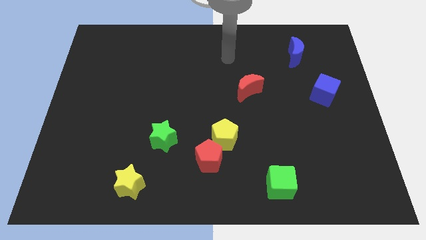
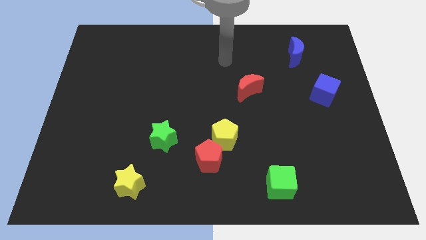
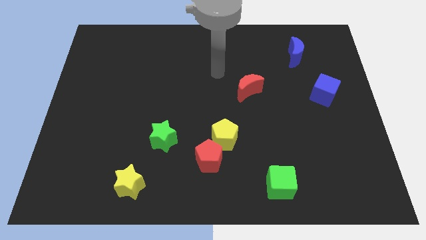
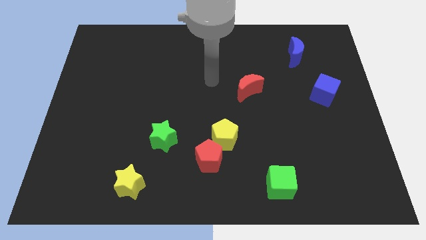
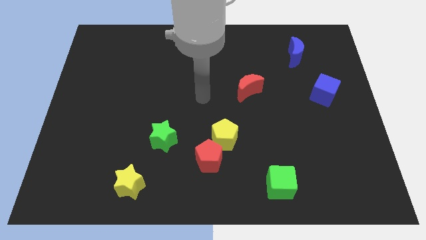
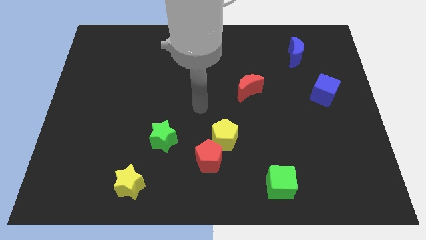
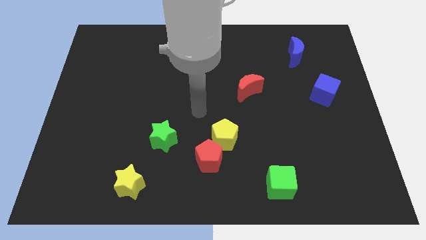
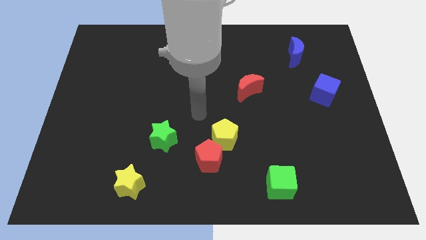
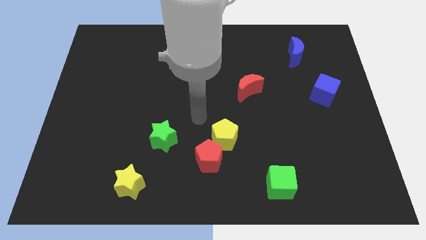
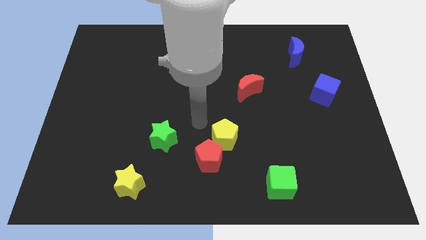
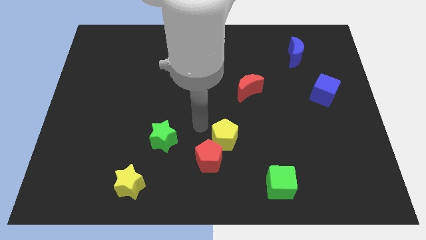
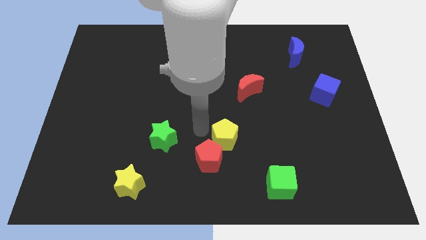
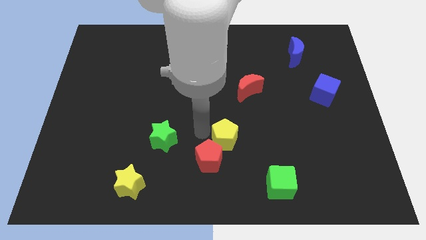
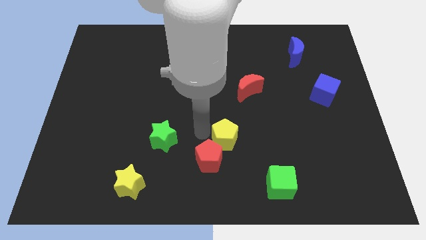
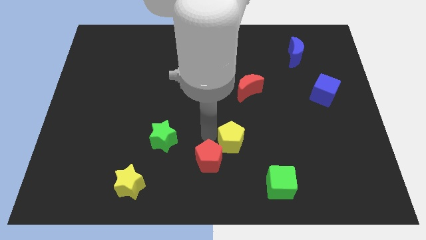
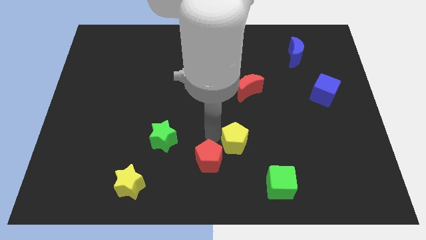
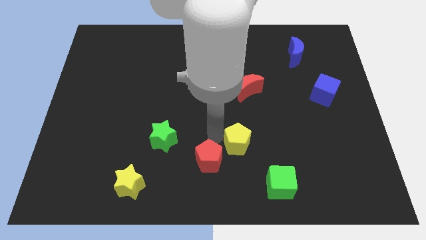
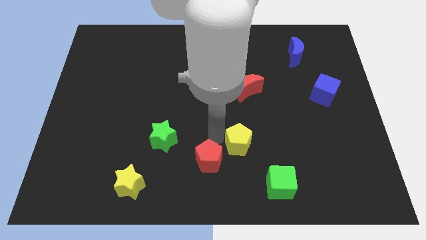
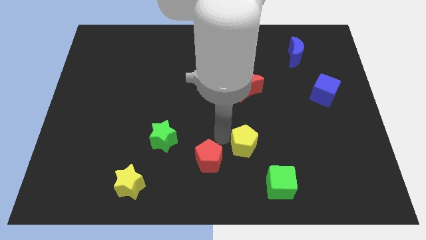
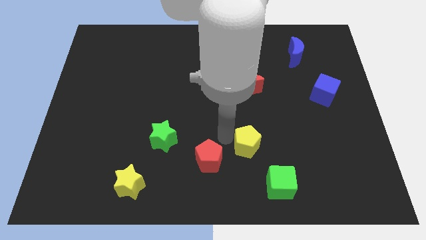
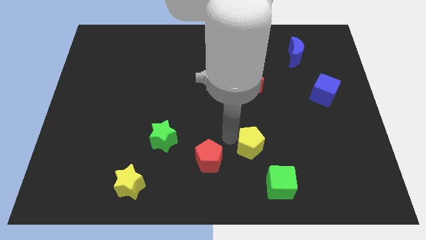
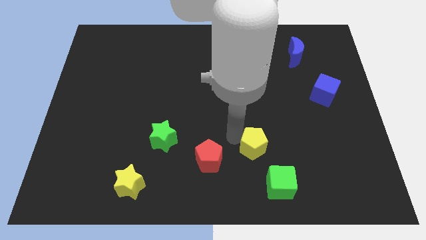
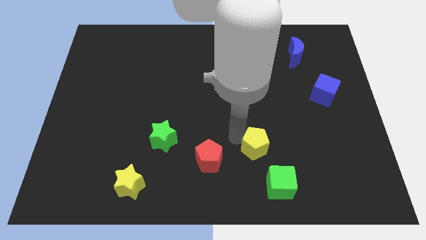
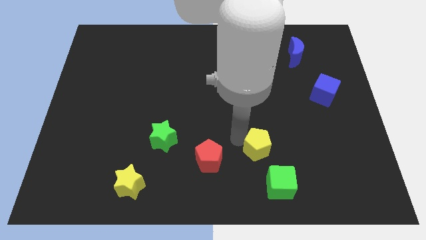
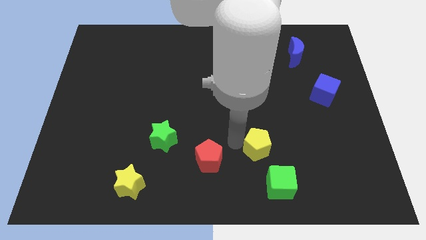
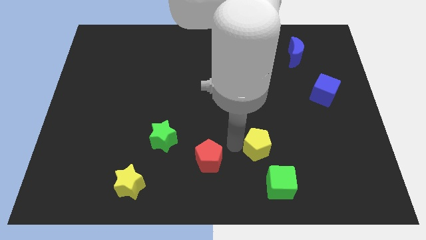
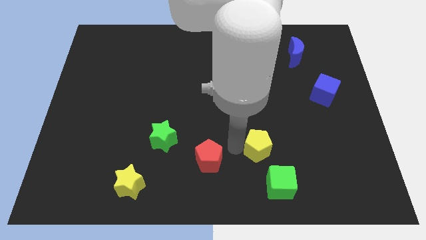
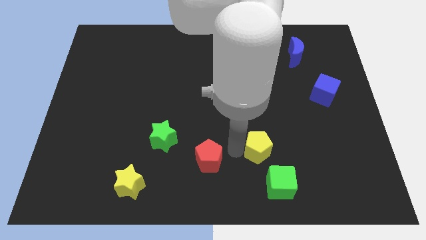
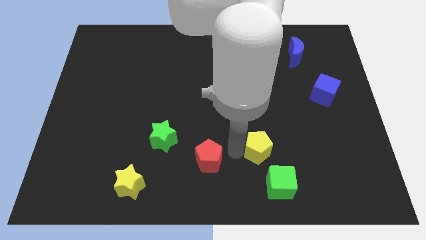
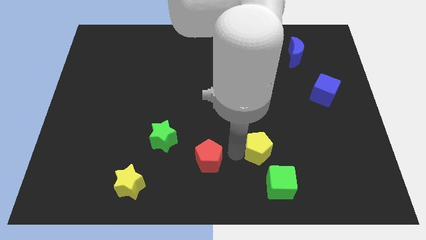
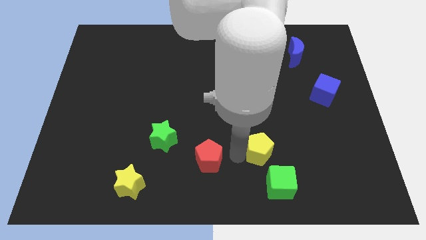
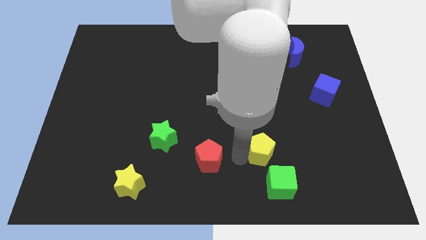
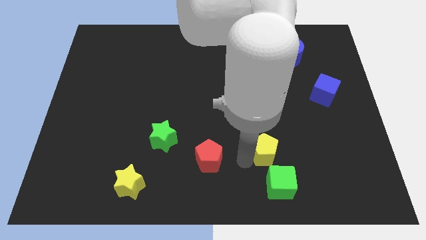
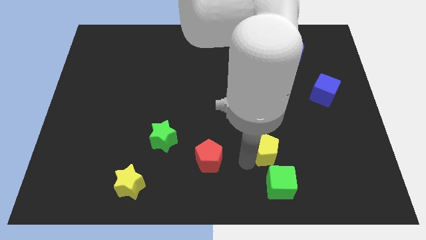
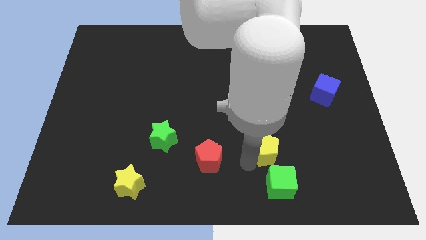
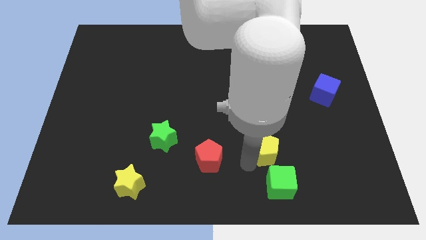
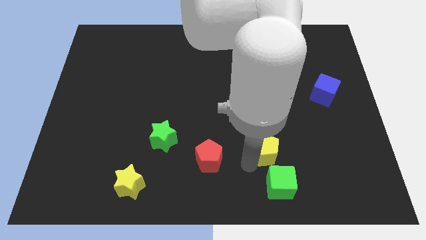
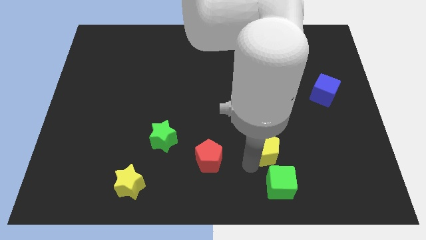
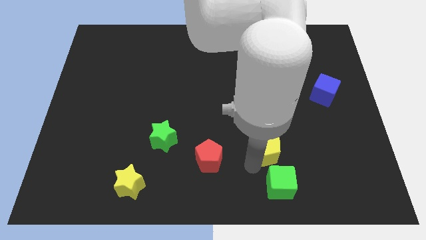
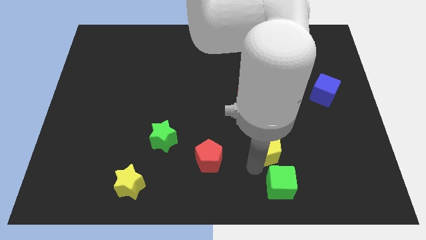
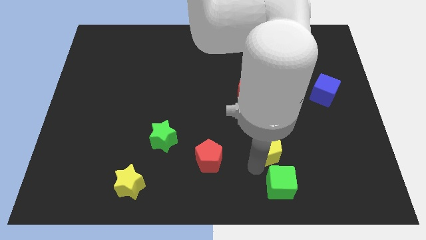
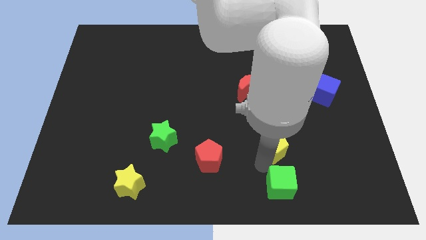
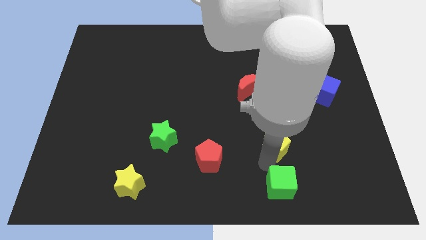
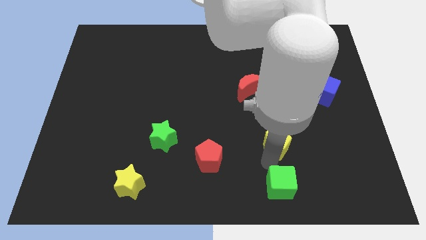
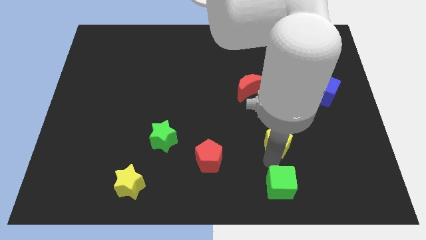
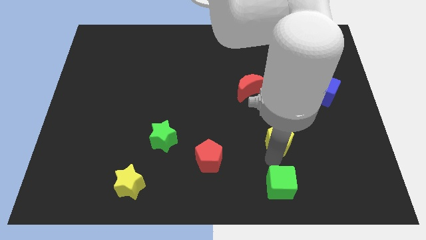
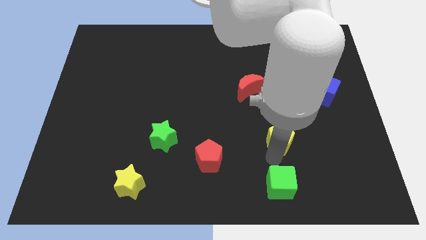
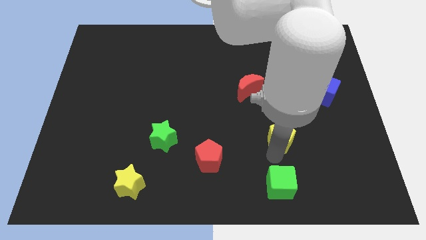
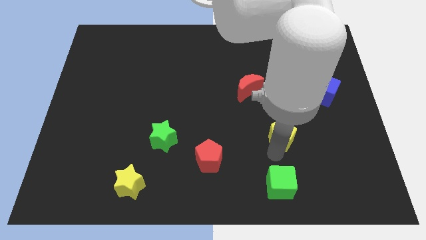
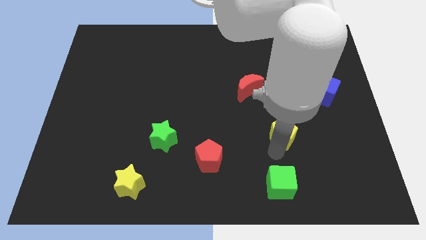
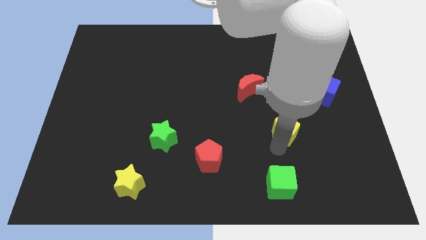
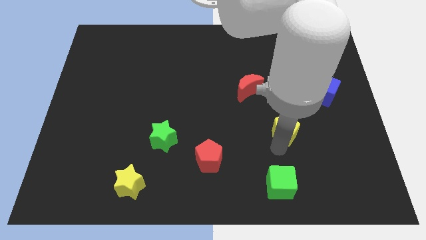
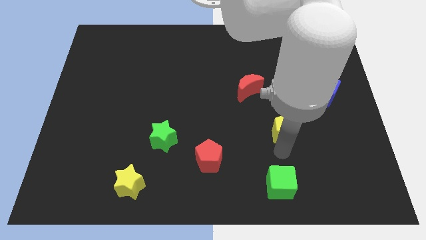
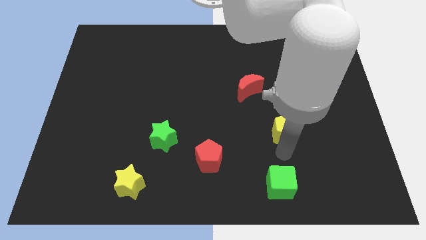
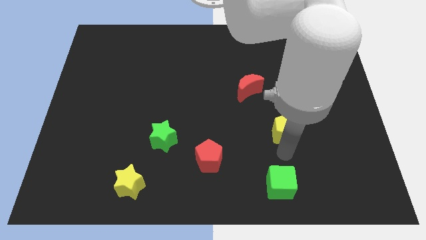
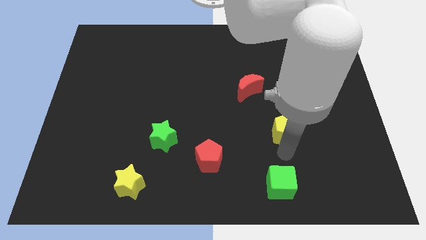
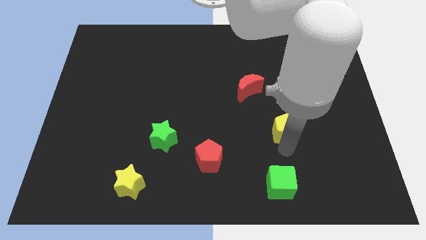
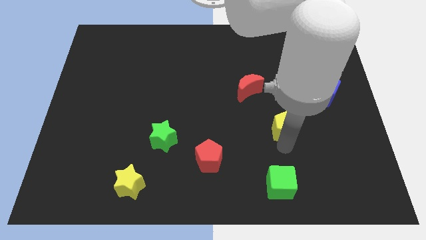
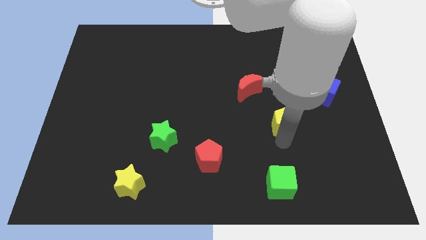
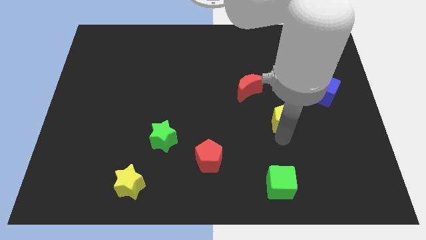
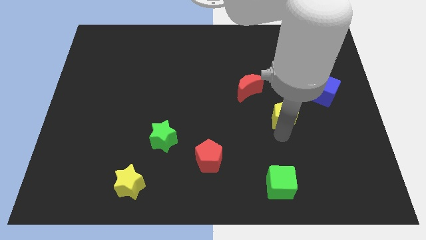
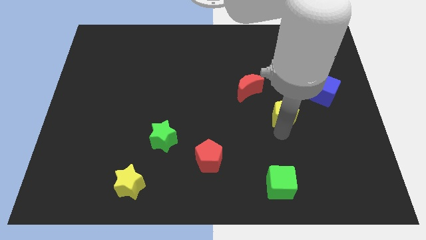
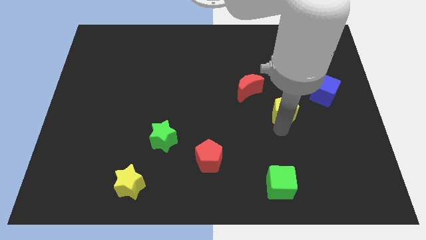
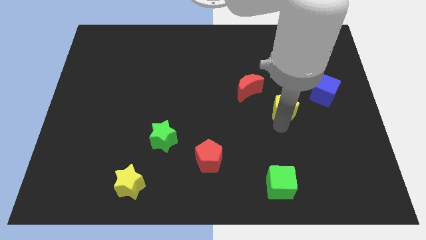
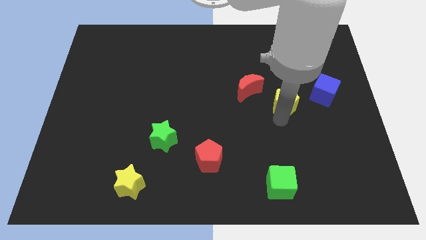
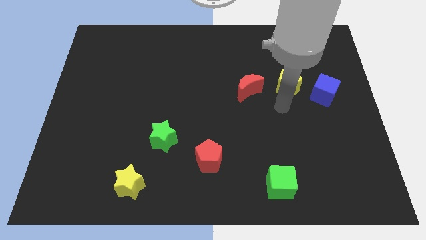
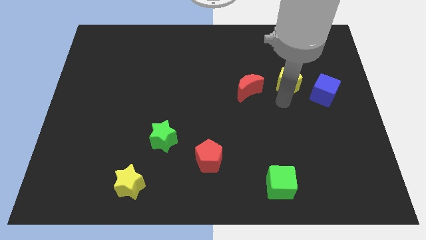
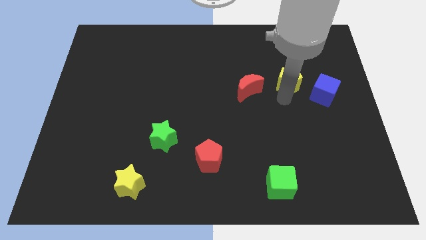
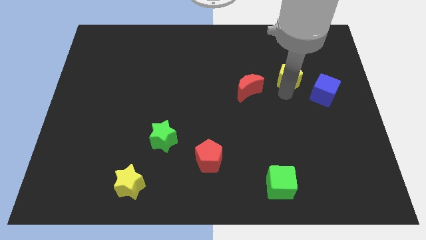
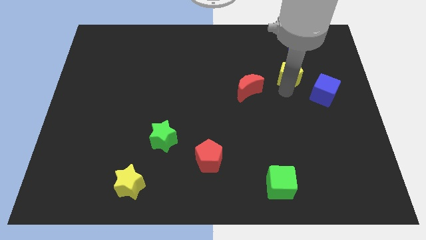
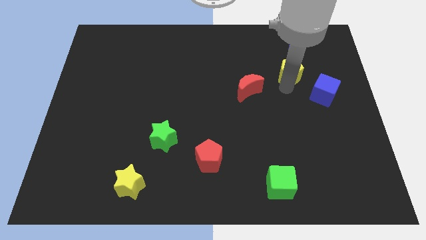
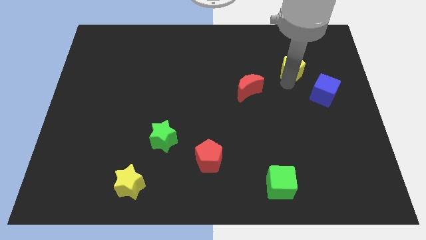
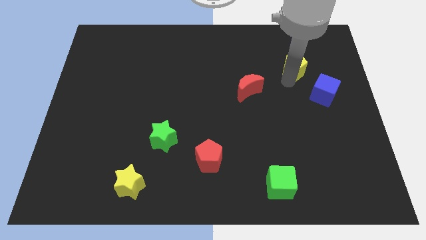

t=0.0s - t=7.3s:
push the yellow pentagon to the blue moon

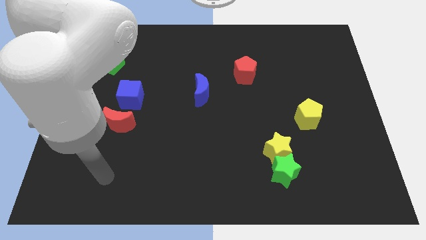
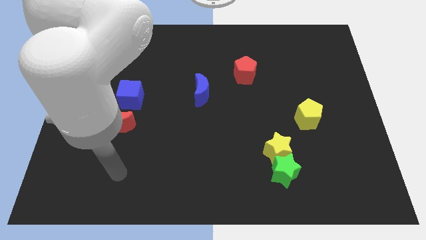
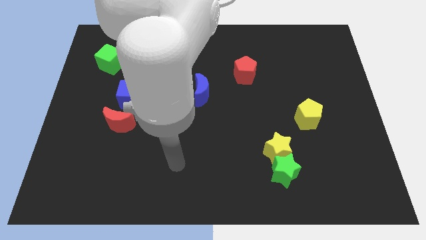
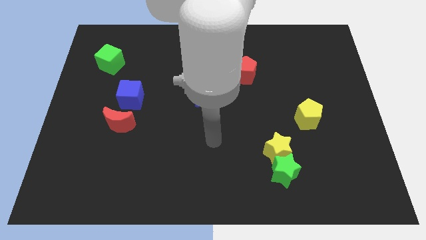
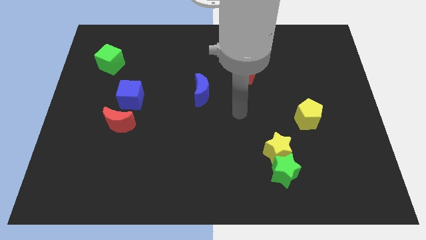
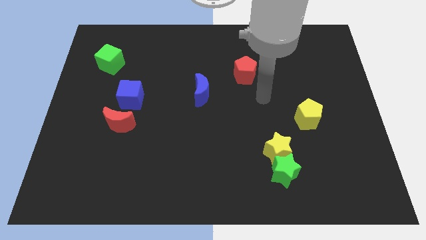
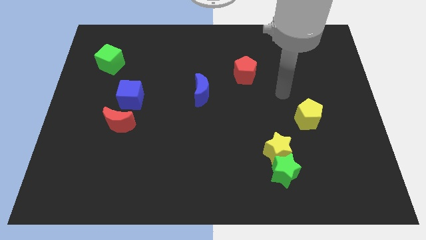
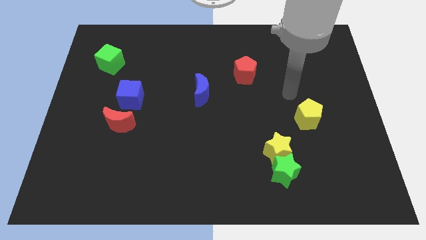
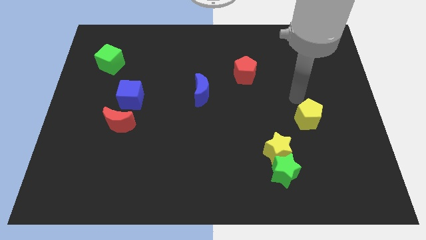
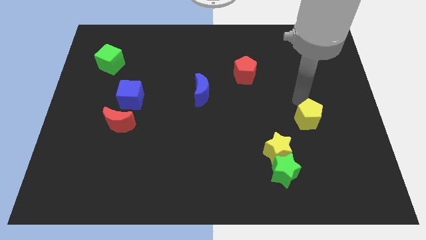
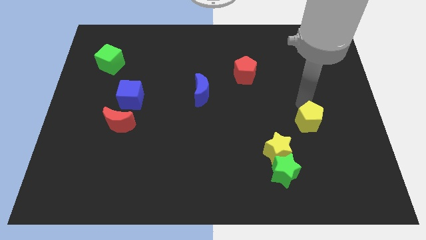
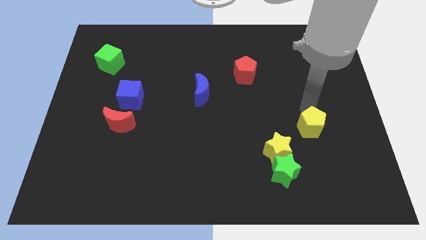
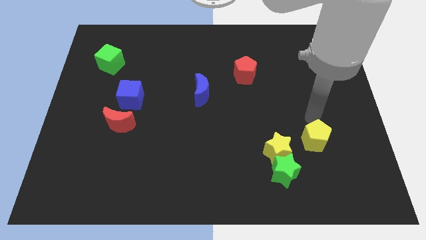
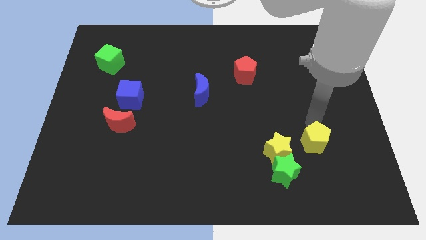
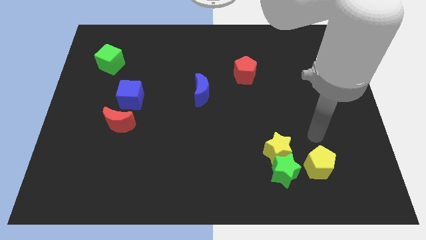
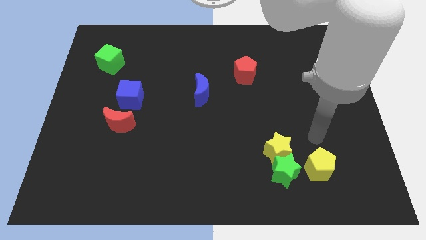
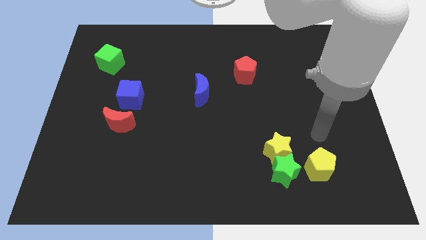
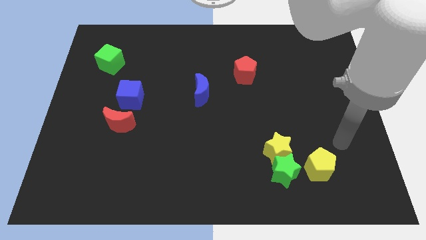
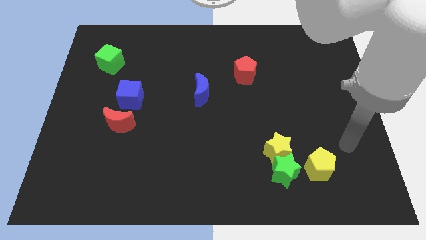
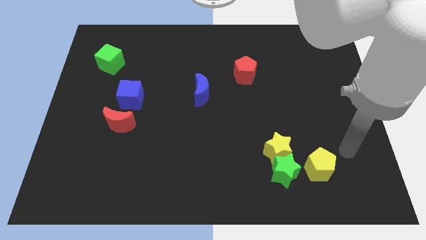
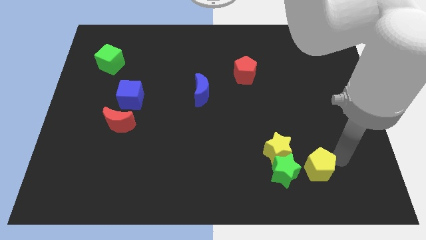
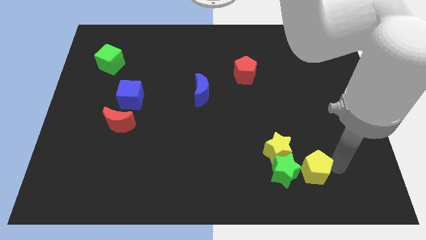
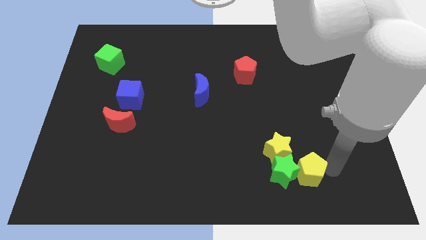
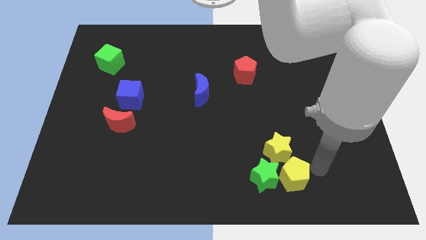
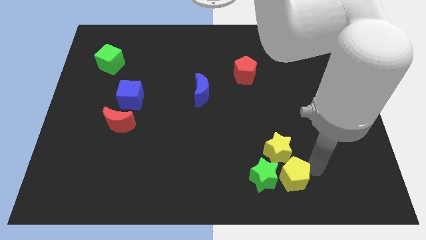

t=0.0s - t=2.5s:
put the yellow pentagon towards the green star
